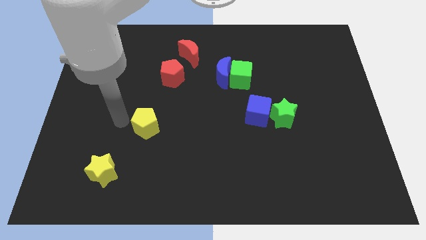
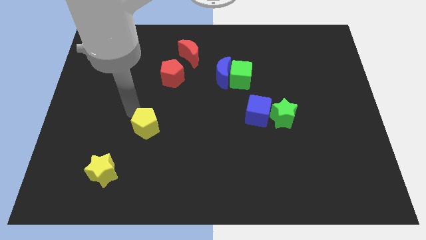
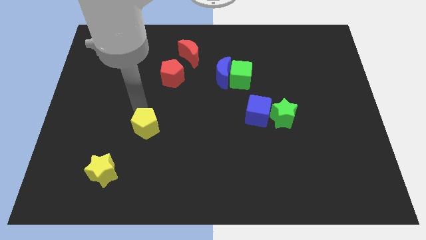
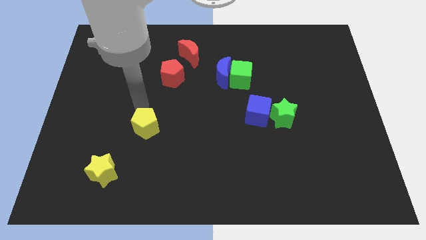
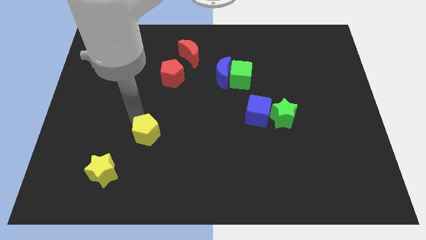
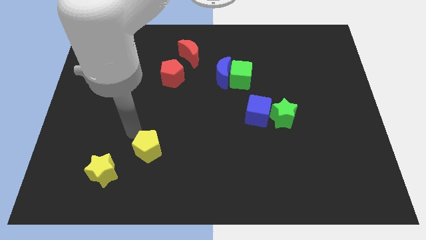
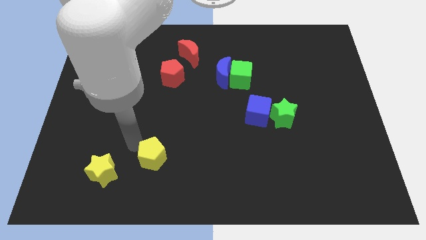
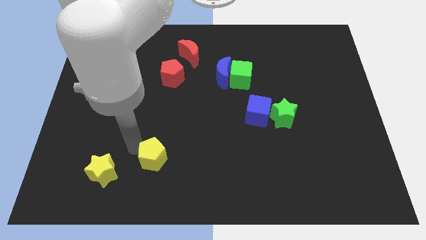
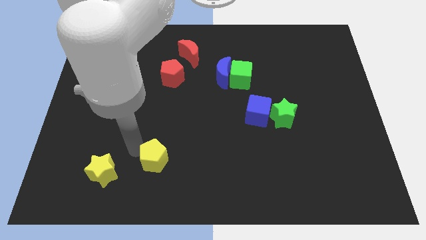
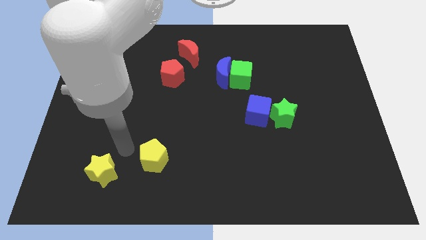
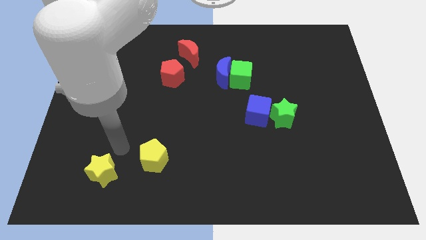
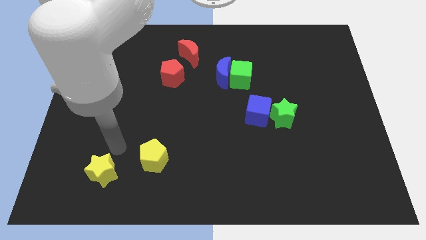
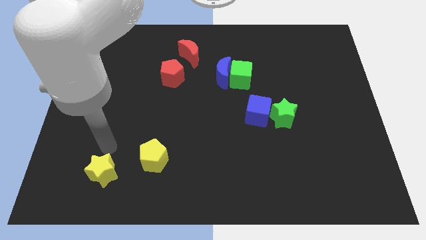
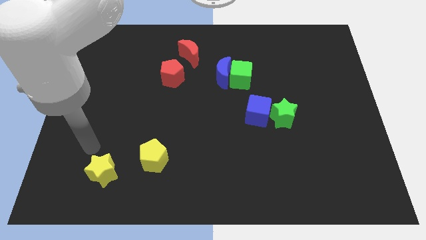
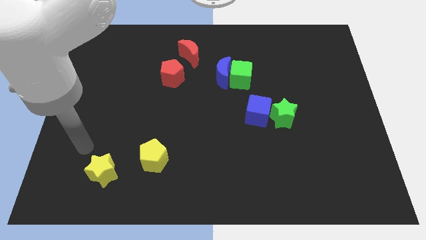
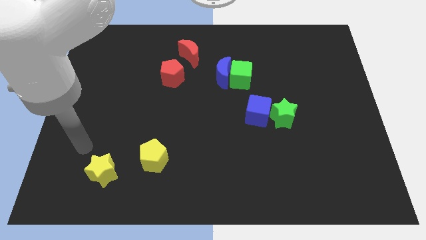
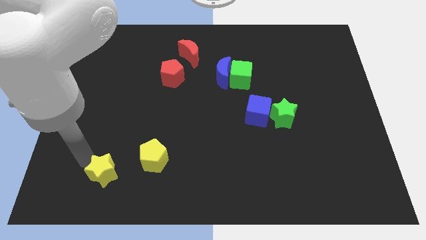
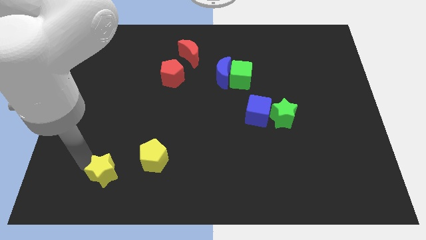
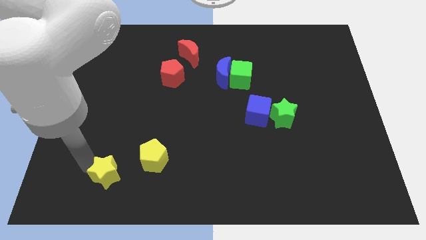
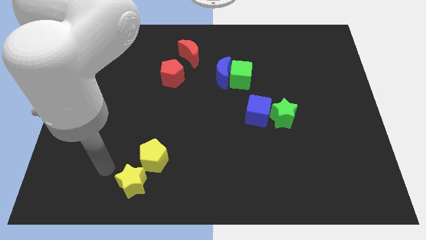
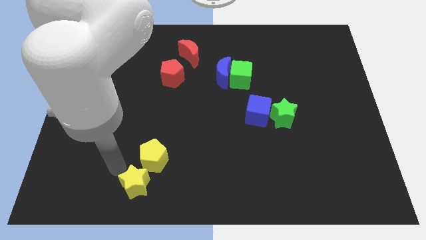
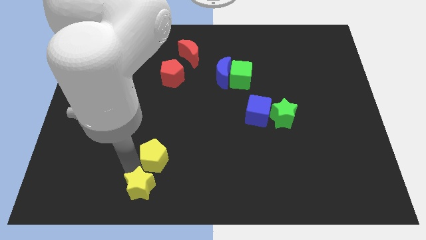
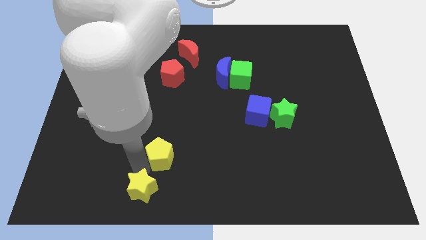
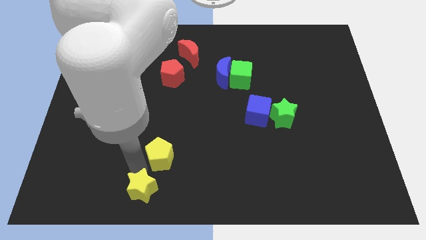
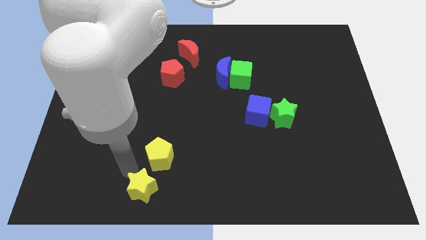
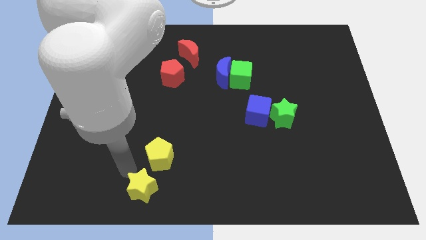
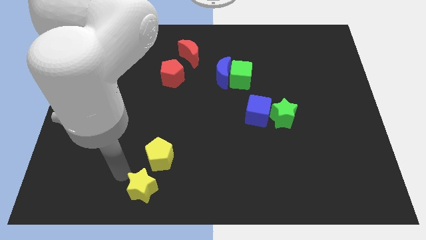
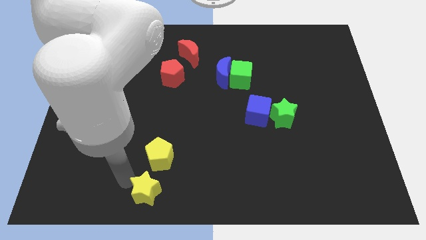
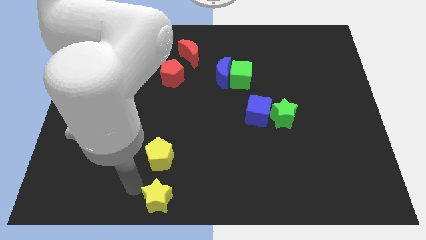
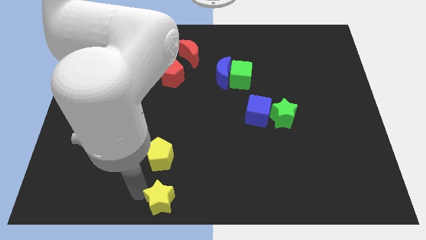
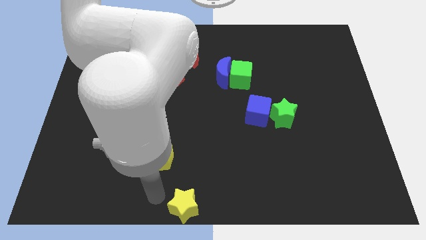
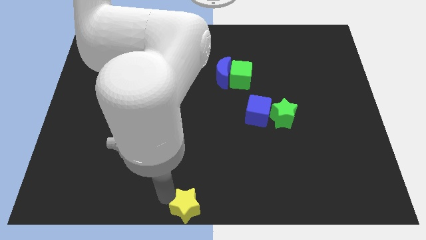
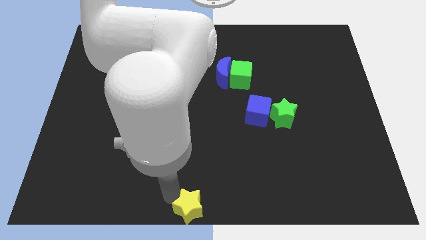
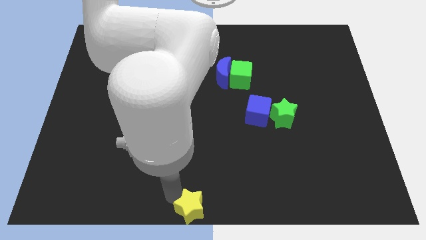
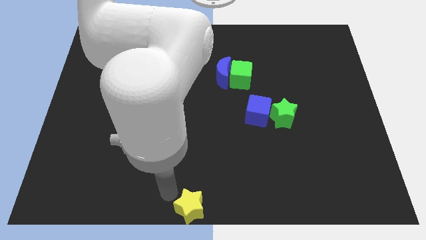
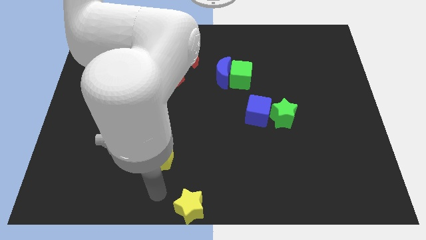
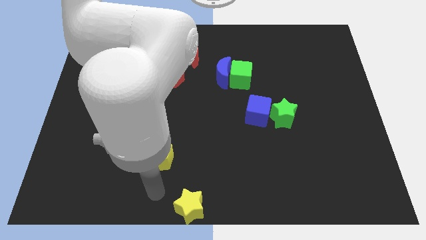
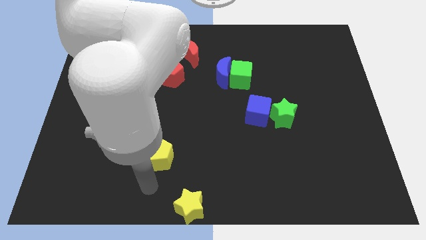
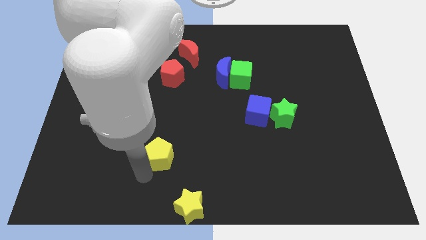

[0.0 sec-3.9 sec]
move the yellow star to the bottom center

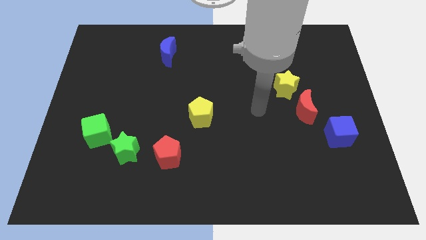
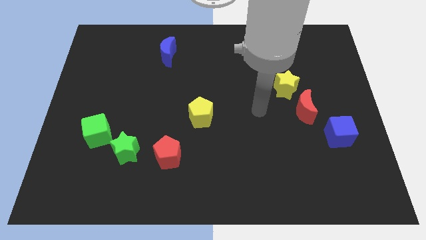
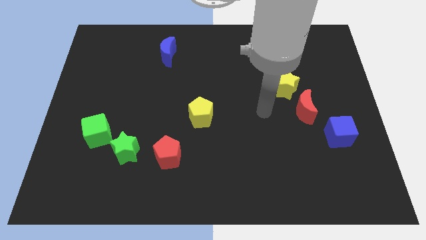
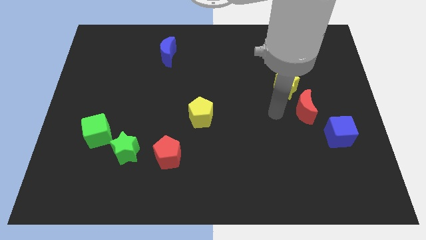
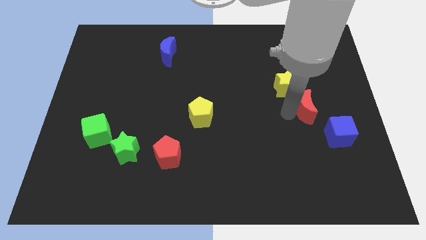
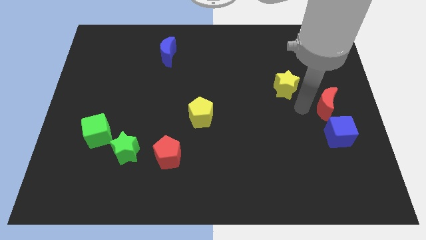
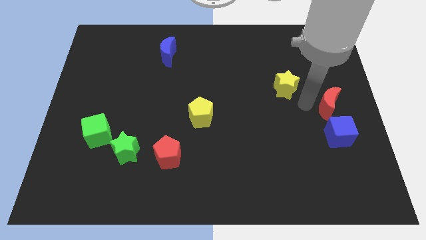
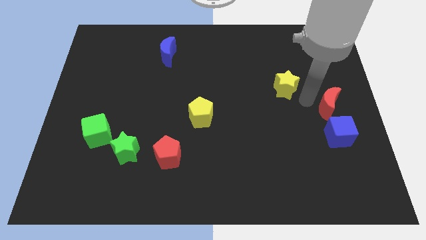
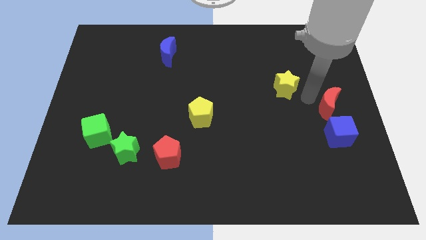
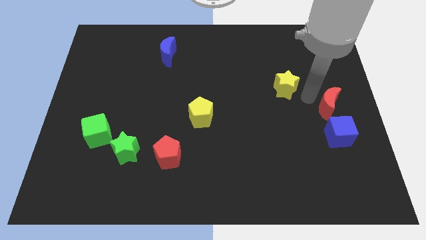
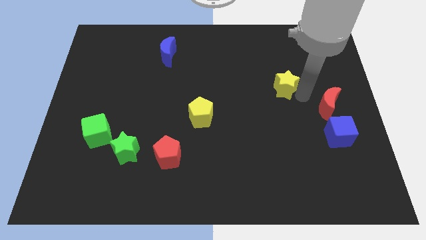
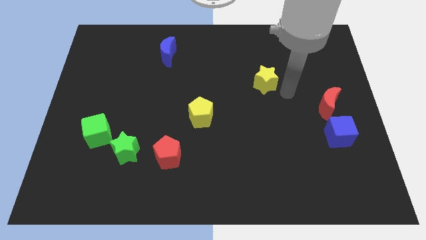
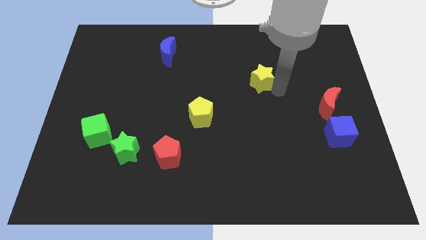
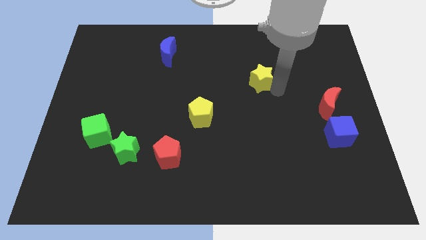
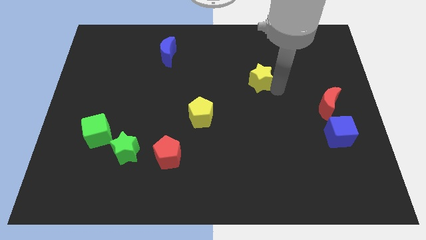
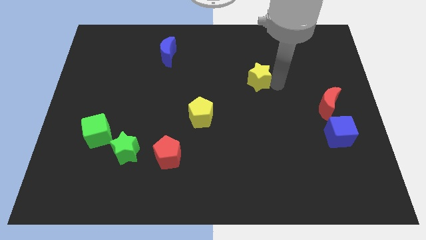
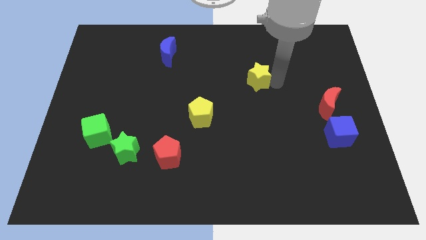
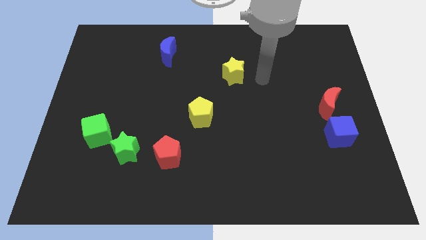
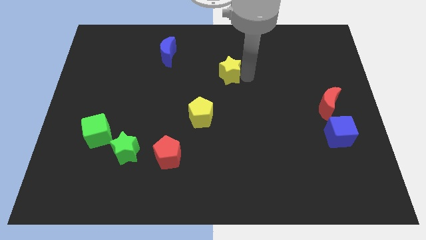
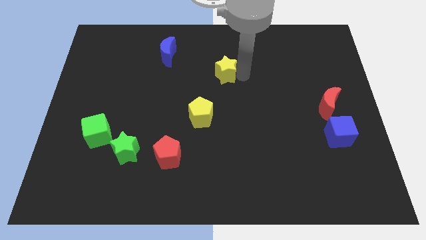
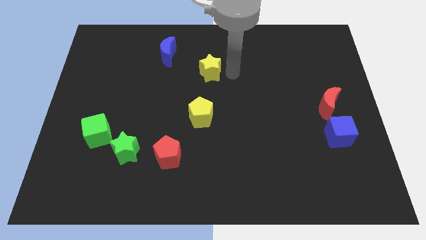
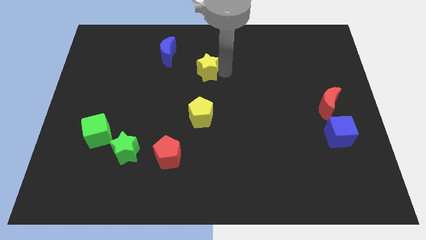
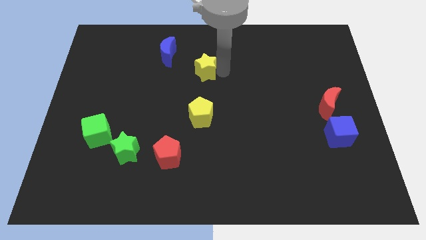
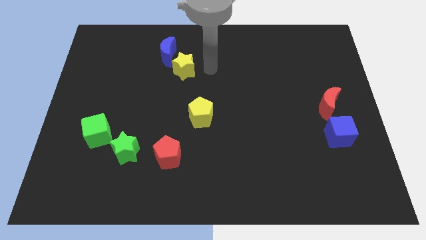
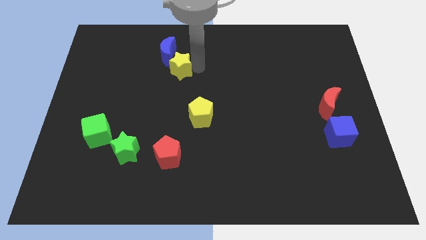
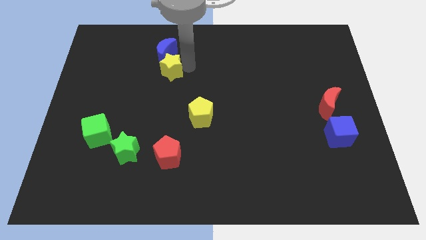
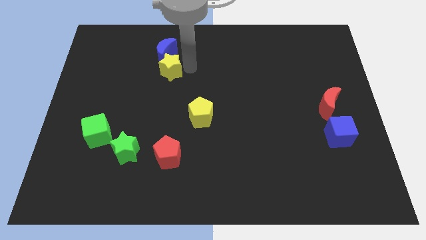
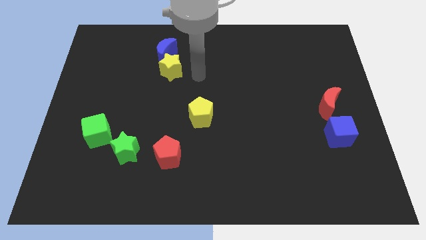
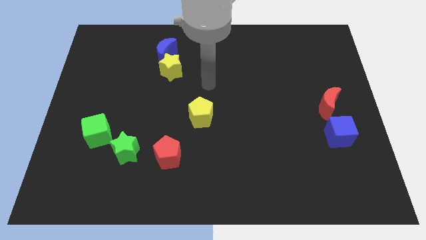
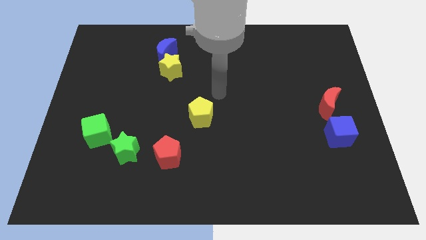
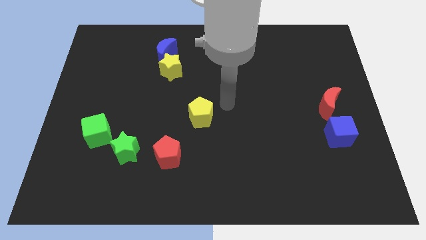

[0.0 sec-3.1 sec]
push the yellow star into the blue crescent

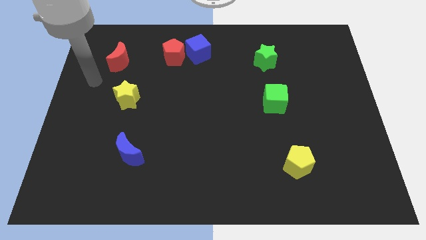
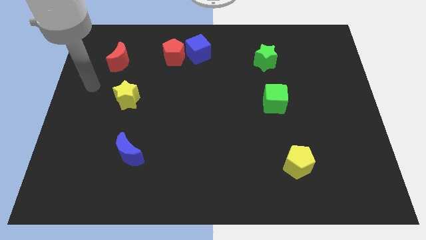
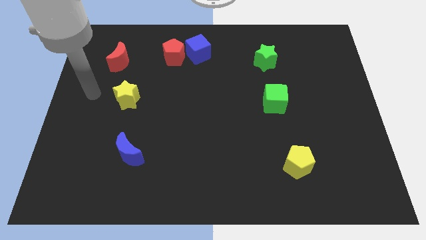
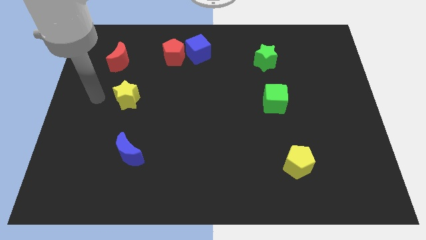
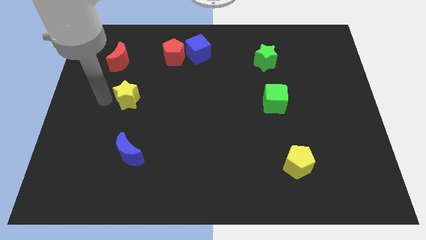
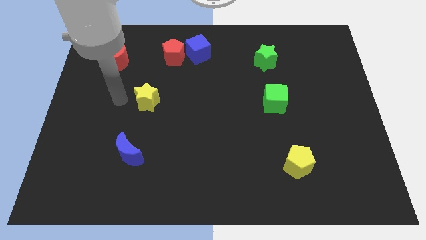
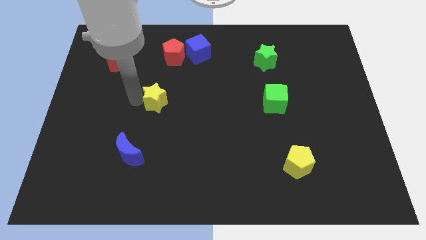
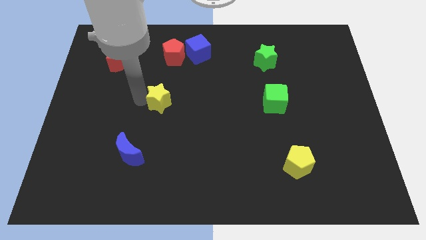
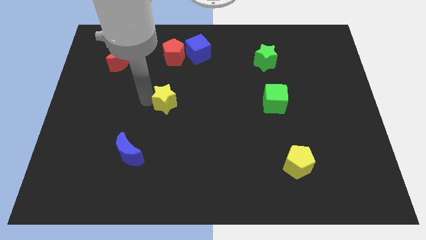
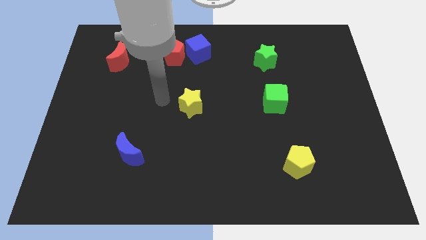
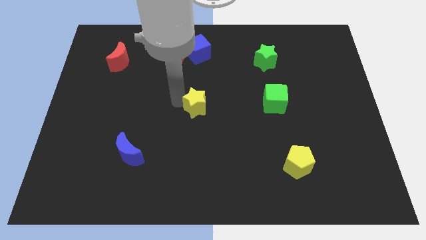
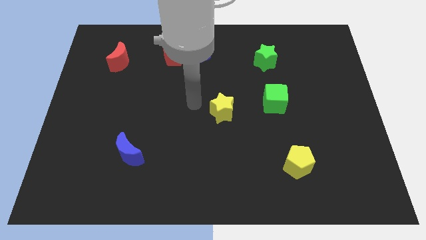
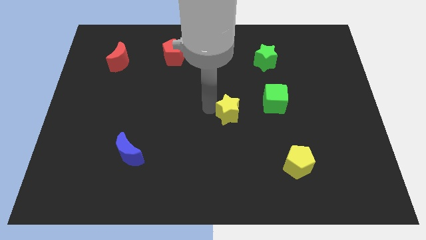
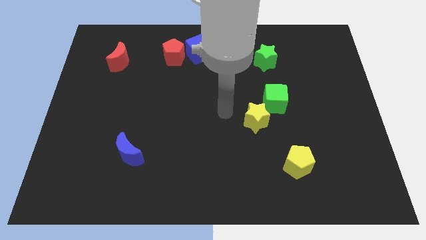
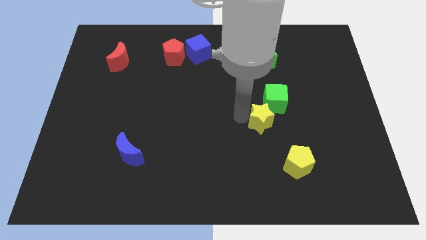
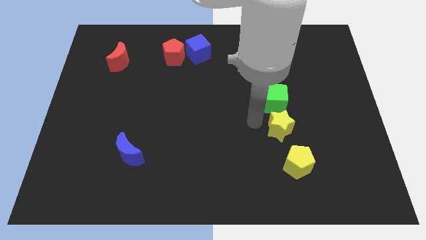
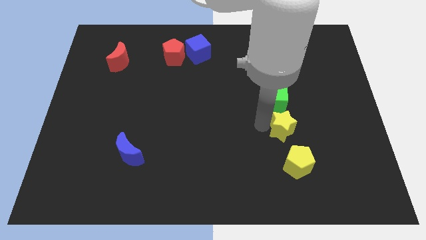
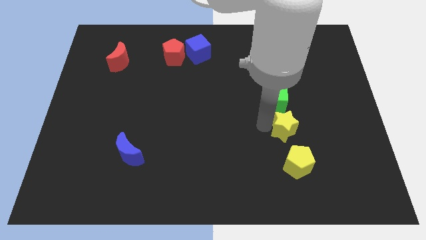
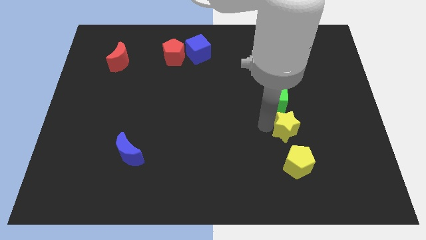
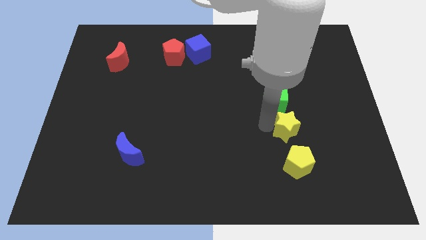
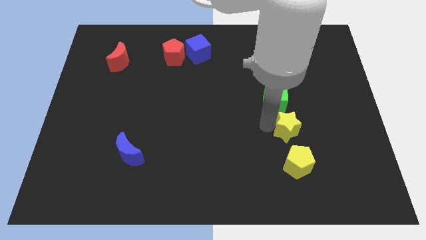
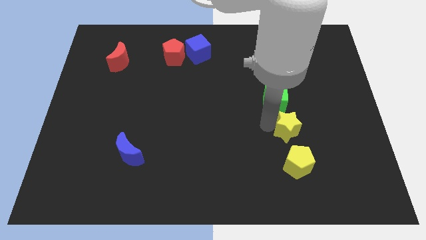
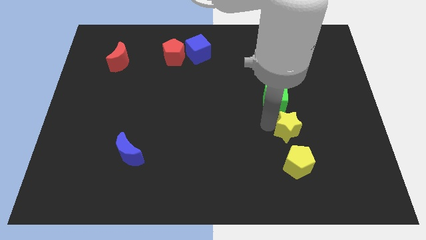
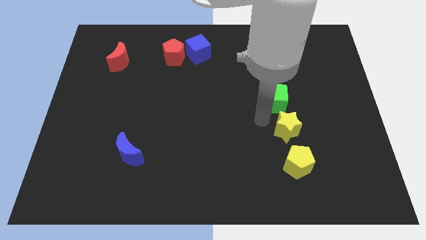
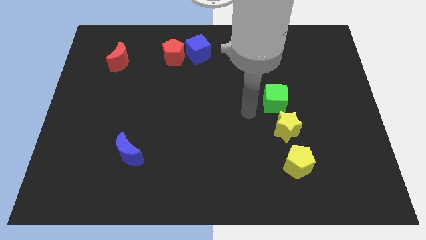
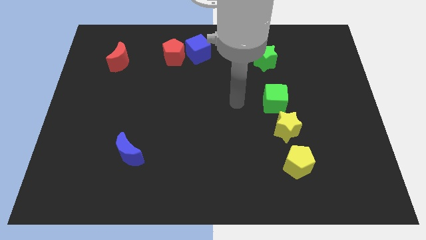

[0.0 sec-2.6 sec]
place the yellow star in between the green cube and yellow pentagon
